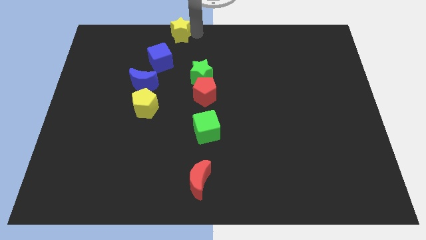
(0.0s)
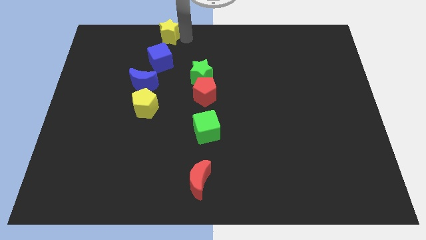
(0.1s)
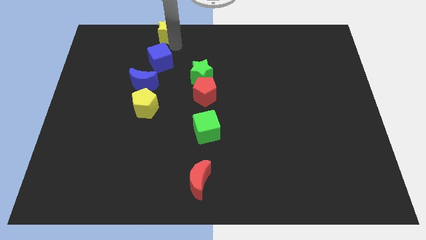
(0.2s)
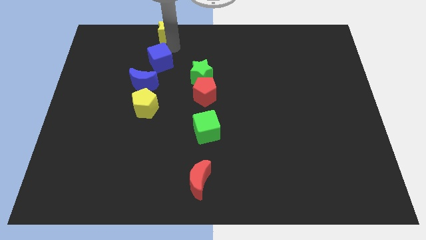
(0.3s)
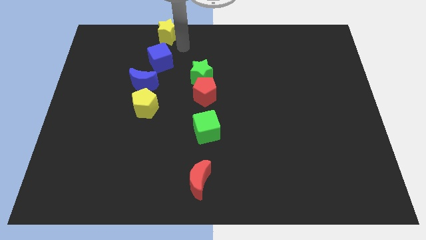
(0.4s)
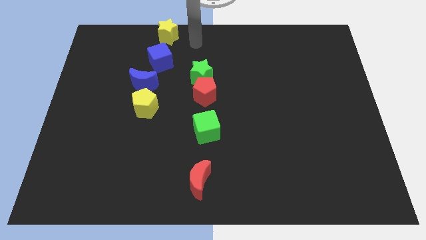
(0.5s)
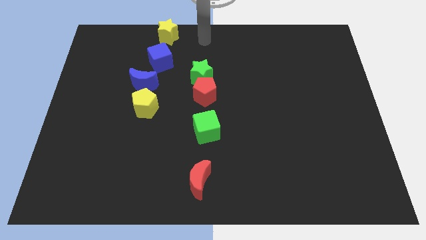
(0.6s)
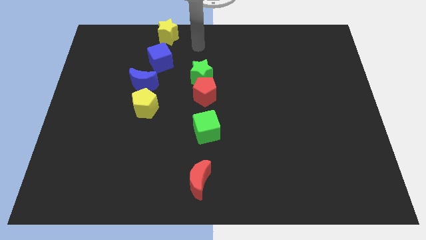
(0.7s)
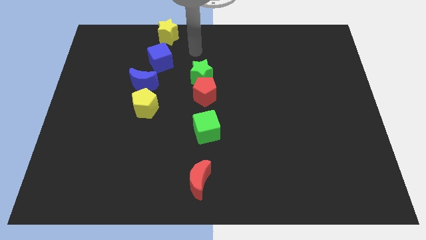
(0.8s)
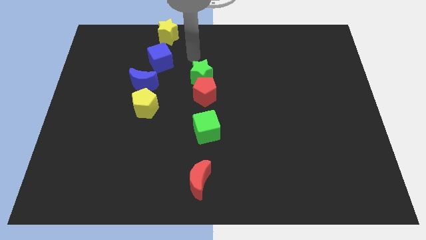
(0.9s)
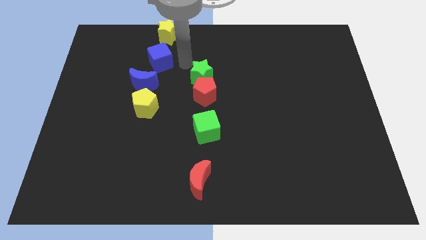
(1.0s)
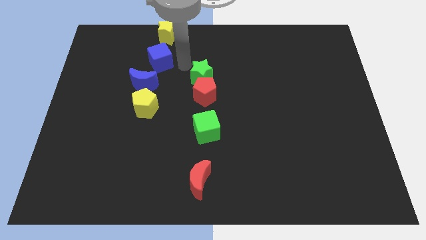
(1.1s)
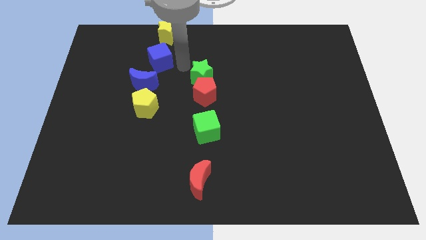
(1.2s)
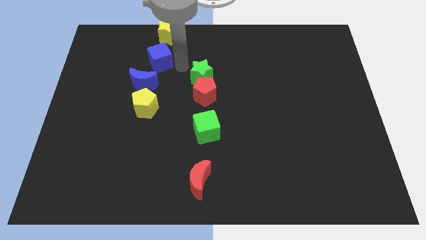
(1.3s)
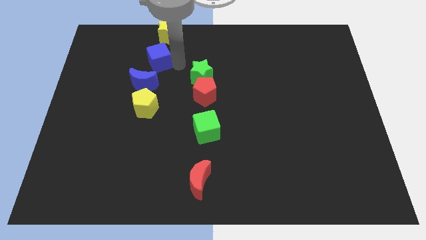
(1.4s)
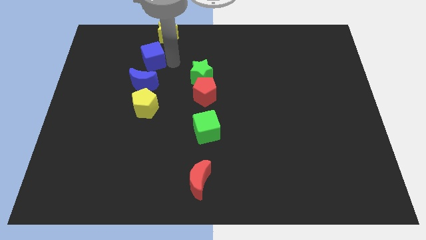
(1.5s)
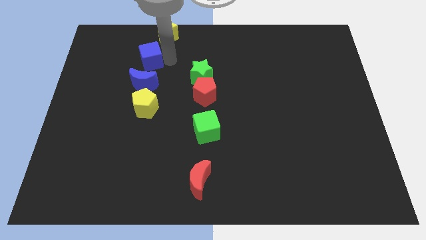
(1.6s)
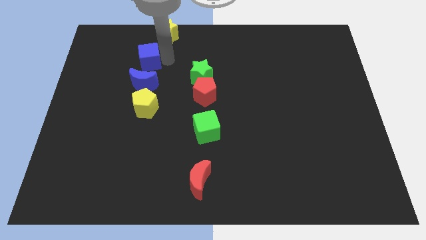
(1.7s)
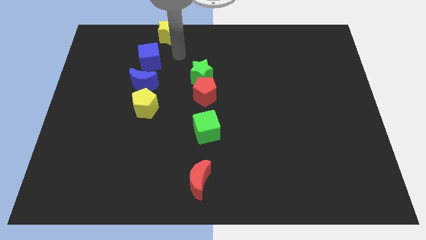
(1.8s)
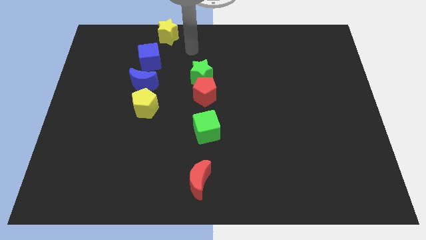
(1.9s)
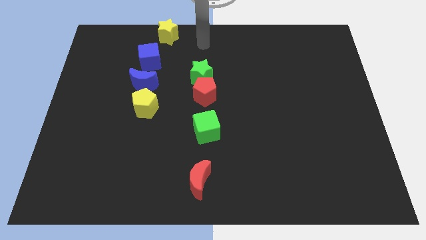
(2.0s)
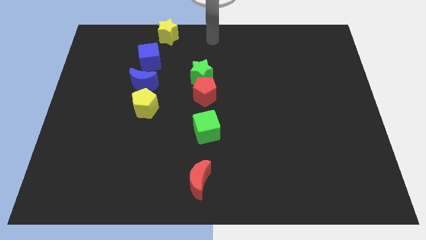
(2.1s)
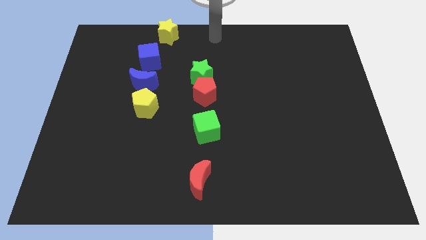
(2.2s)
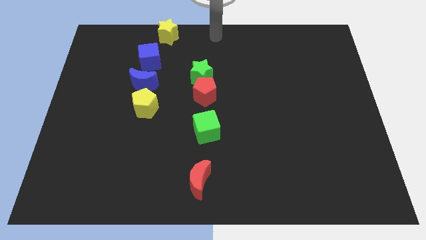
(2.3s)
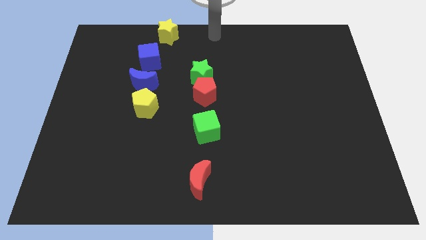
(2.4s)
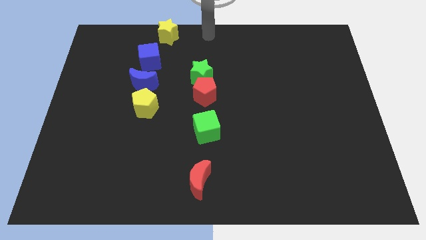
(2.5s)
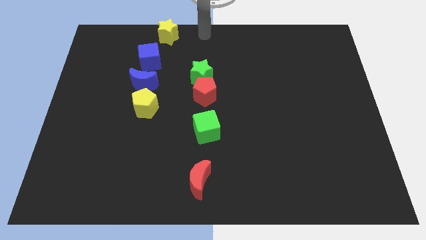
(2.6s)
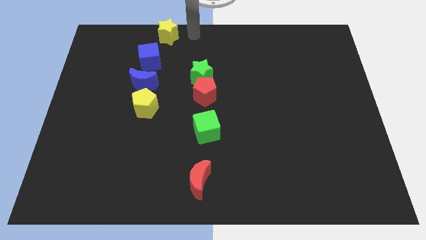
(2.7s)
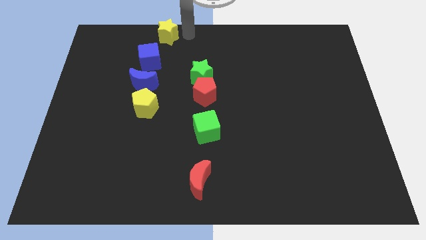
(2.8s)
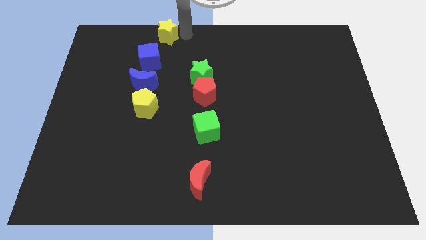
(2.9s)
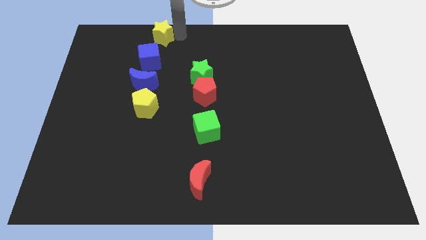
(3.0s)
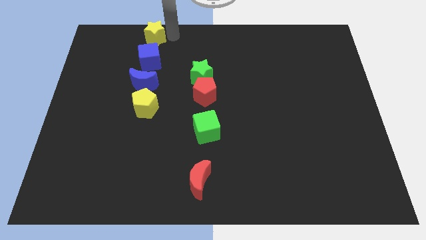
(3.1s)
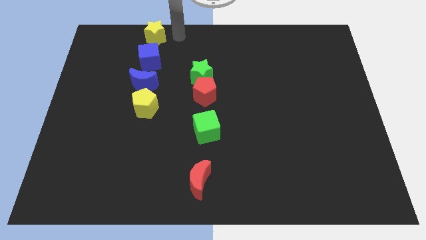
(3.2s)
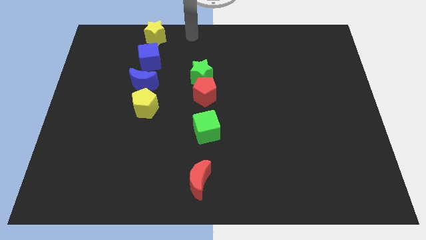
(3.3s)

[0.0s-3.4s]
place the yellow star and blue cube vertically above the blue crescent

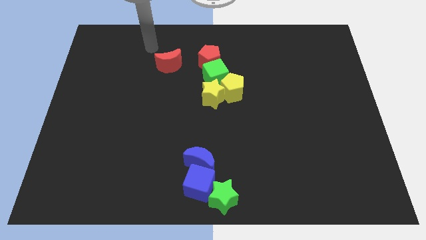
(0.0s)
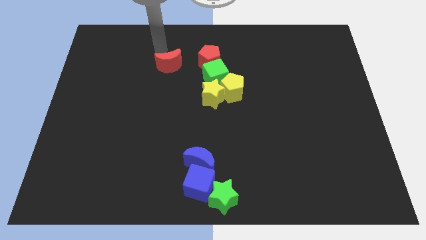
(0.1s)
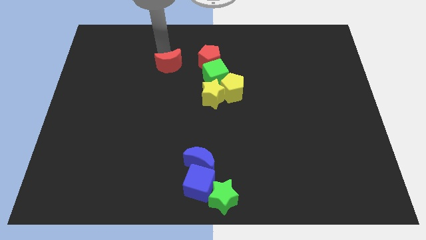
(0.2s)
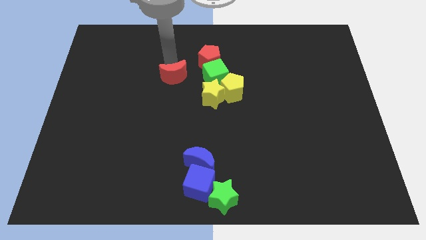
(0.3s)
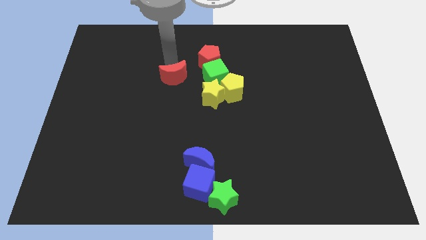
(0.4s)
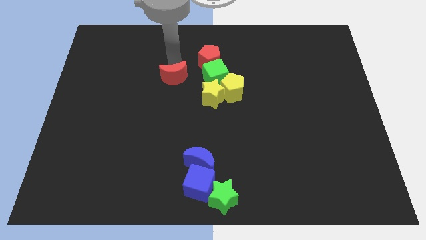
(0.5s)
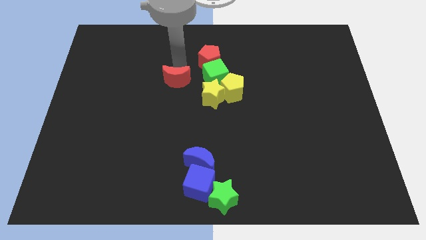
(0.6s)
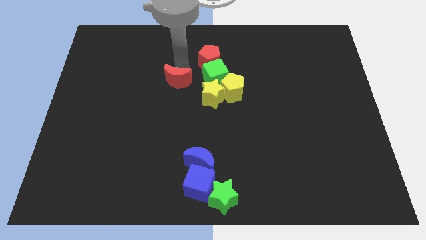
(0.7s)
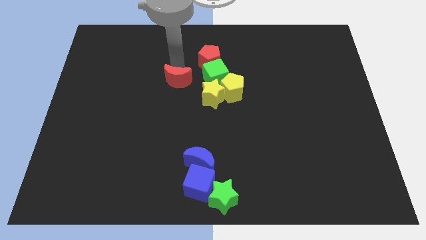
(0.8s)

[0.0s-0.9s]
push the red crescent slightly to the bottom

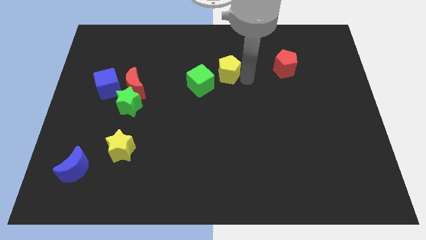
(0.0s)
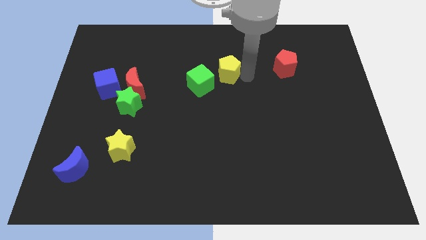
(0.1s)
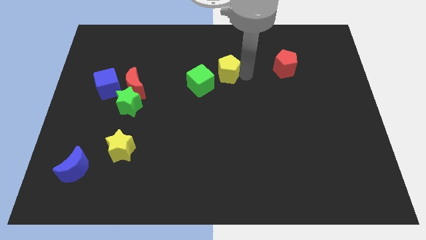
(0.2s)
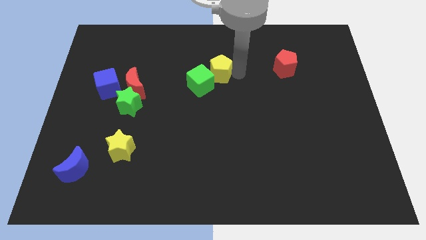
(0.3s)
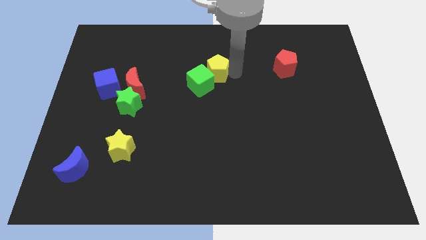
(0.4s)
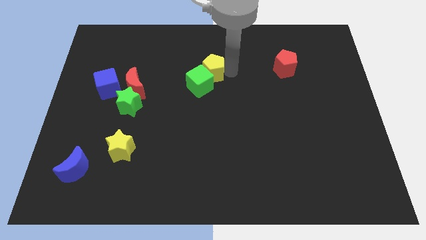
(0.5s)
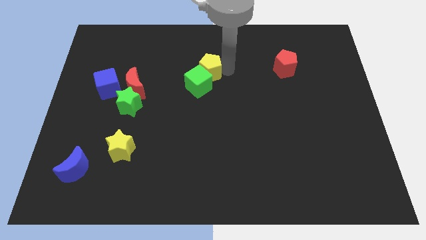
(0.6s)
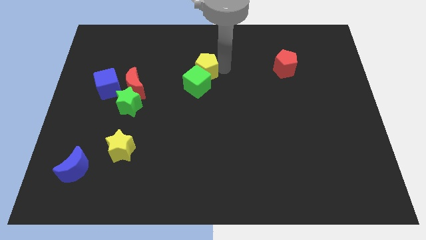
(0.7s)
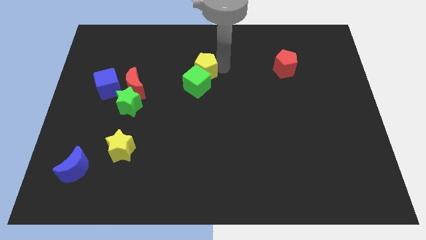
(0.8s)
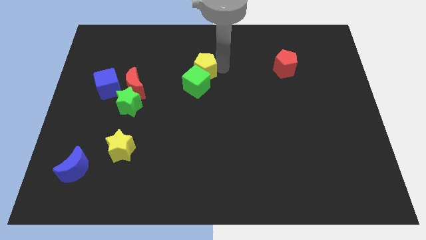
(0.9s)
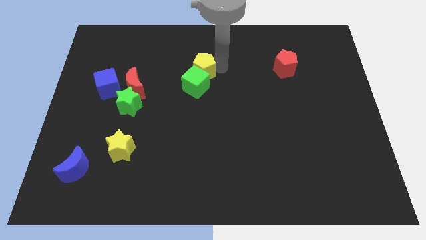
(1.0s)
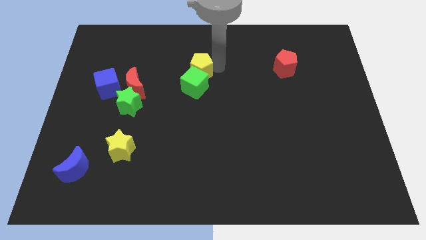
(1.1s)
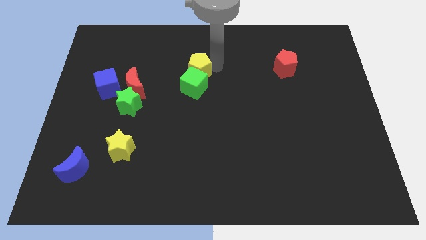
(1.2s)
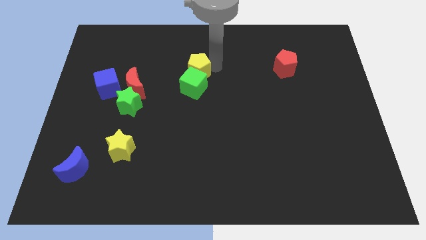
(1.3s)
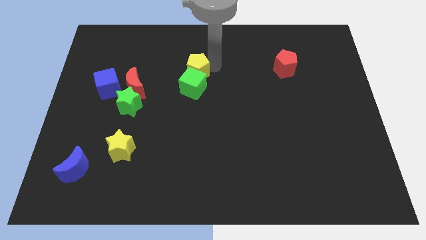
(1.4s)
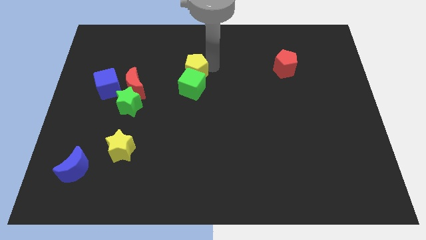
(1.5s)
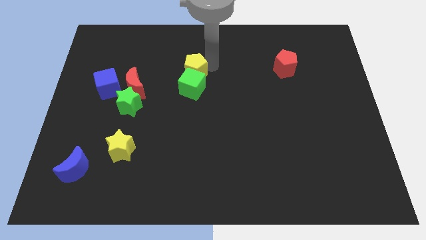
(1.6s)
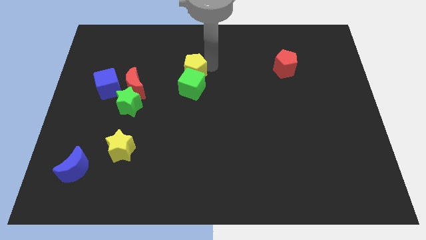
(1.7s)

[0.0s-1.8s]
place yellow pentagon to the top of the green cube

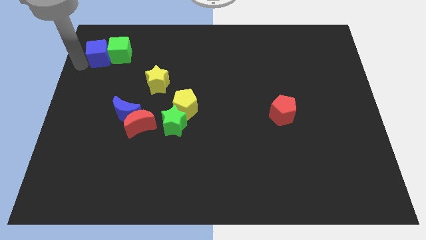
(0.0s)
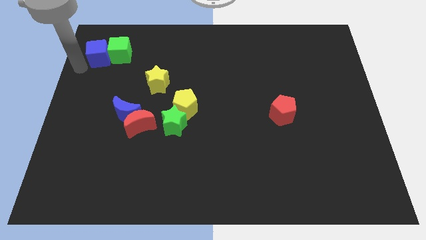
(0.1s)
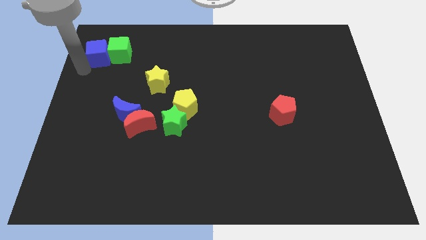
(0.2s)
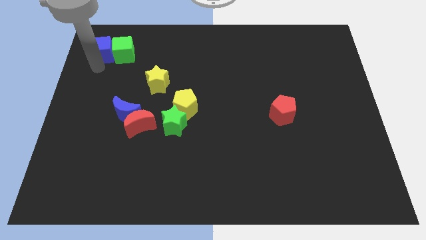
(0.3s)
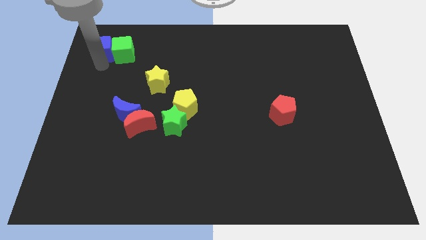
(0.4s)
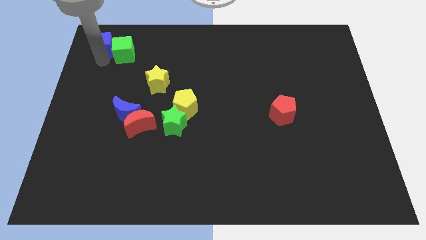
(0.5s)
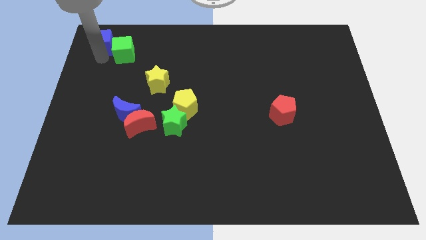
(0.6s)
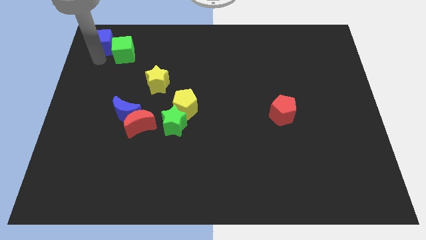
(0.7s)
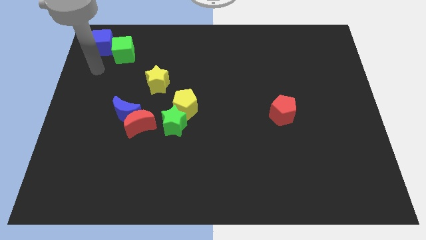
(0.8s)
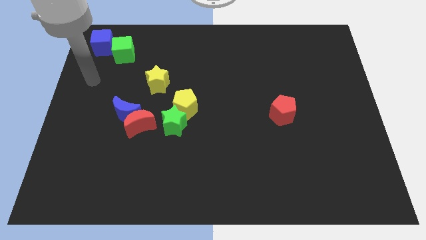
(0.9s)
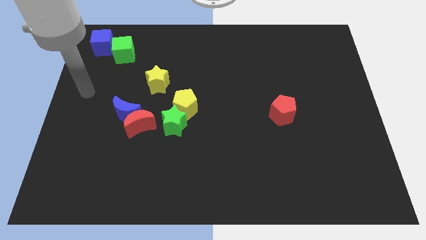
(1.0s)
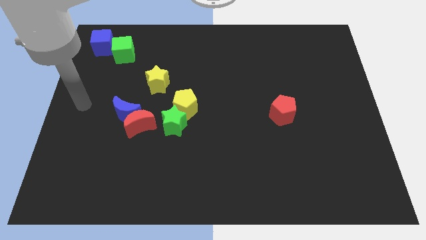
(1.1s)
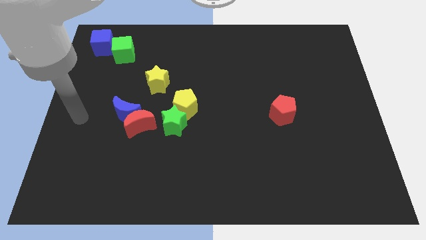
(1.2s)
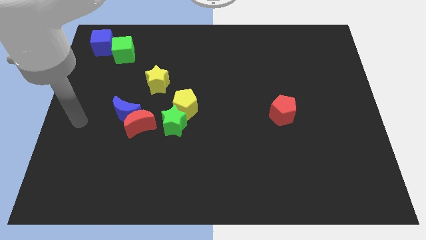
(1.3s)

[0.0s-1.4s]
push the blue cube to the top left

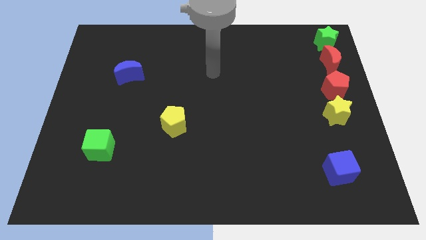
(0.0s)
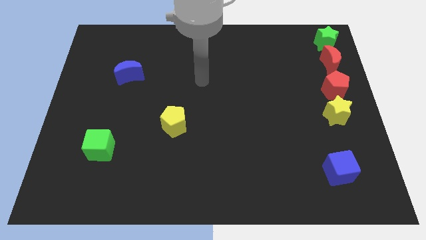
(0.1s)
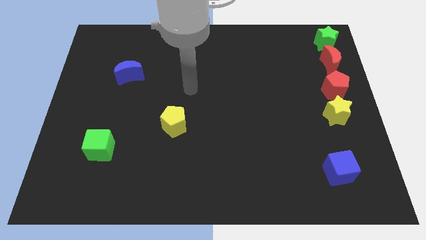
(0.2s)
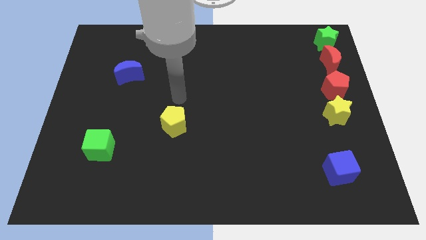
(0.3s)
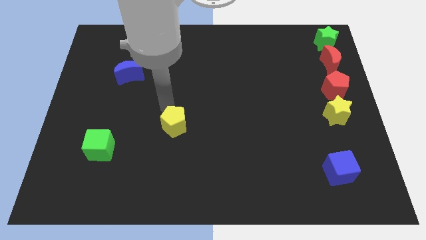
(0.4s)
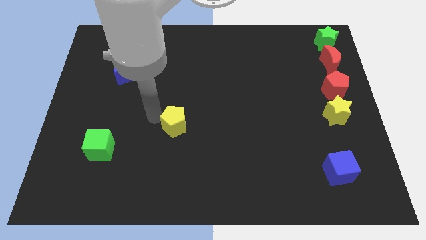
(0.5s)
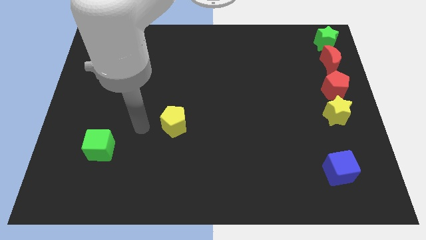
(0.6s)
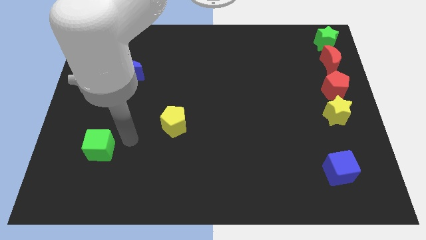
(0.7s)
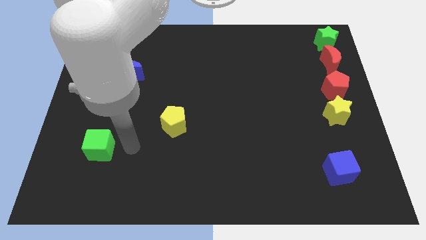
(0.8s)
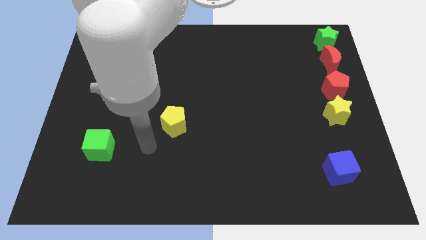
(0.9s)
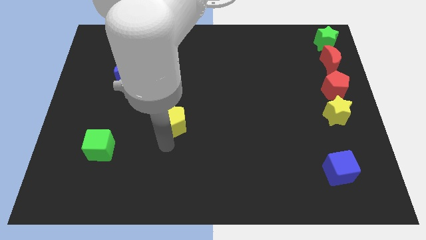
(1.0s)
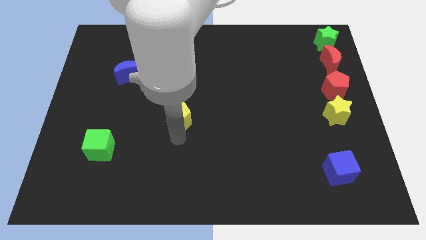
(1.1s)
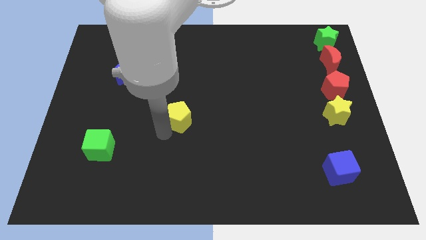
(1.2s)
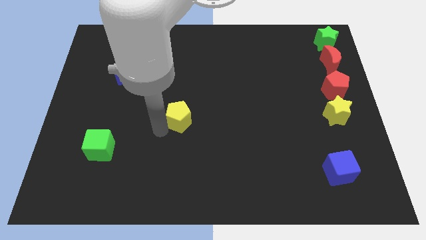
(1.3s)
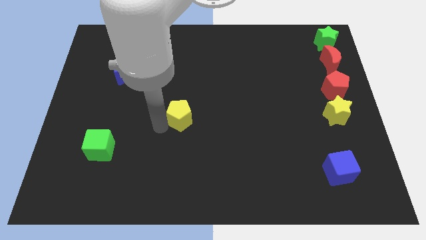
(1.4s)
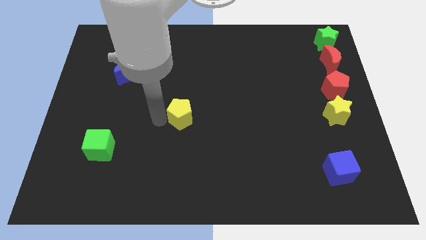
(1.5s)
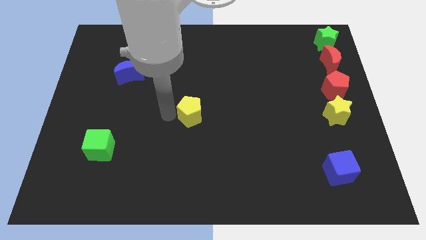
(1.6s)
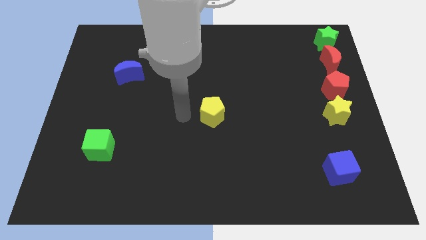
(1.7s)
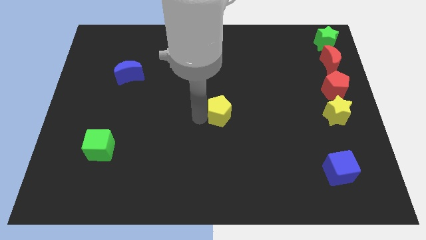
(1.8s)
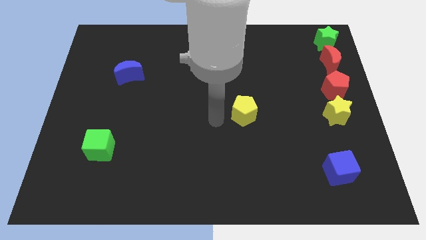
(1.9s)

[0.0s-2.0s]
place the yellow pentagon at center of the board
